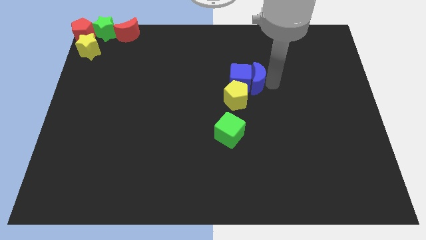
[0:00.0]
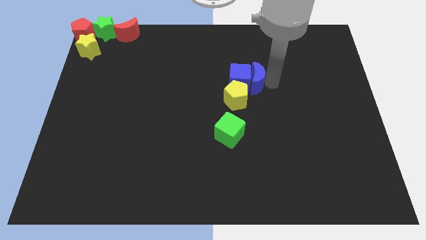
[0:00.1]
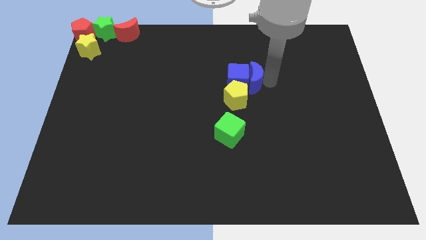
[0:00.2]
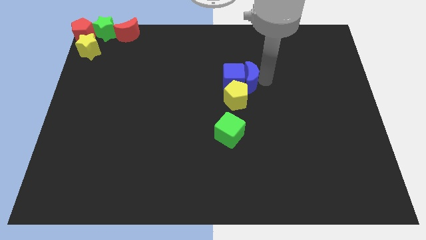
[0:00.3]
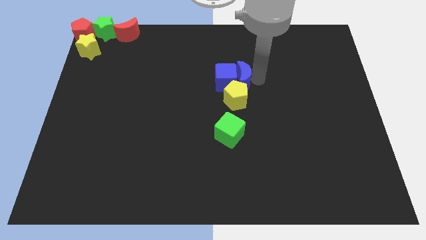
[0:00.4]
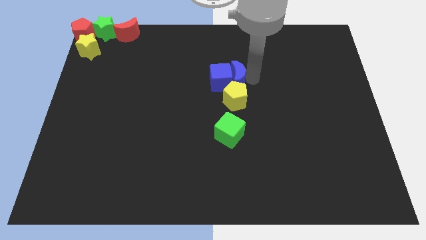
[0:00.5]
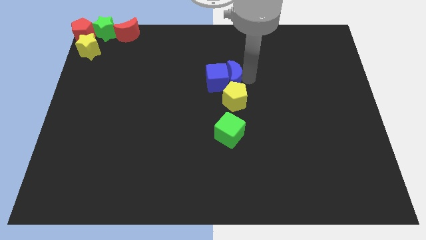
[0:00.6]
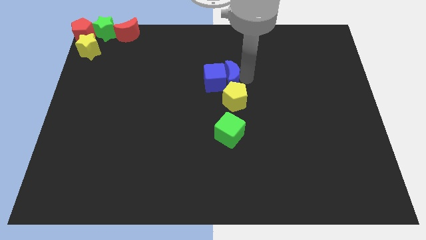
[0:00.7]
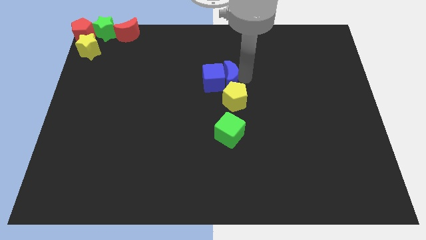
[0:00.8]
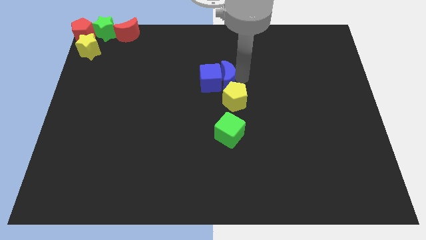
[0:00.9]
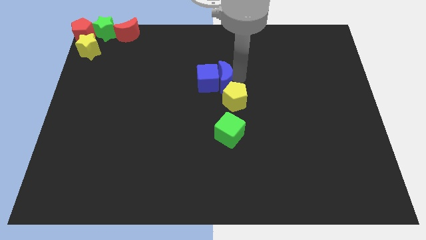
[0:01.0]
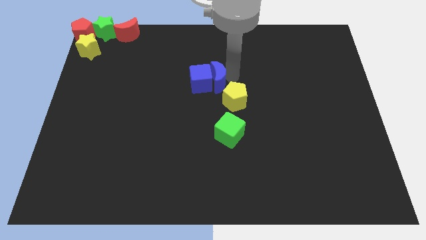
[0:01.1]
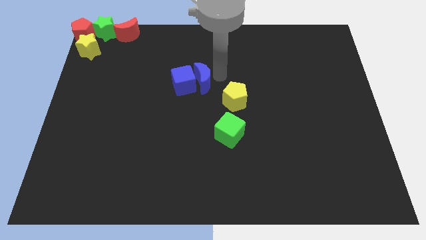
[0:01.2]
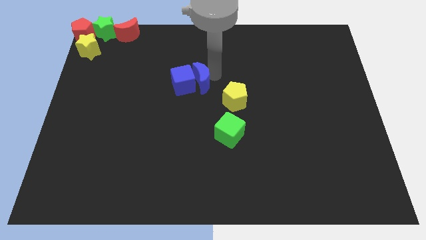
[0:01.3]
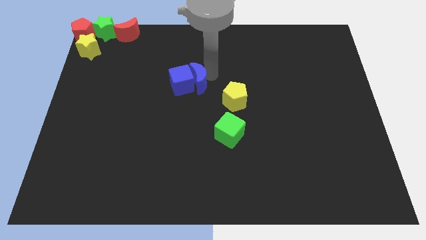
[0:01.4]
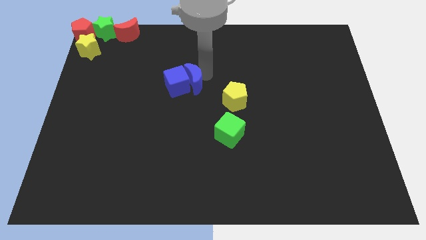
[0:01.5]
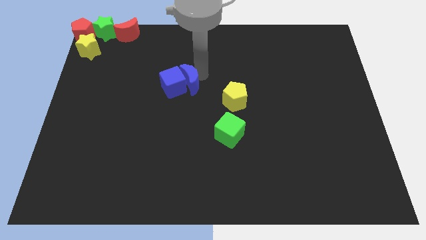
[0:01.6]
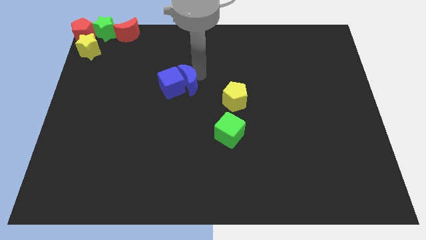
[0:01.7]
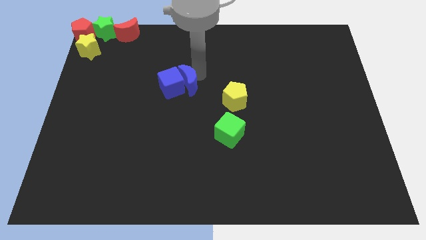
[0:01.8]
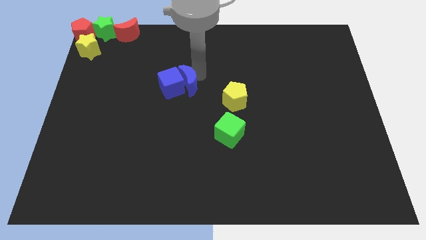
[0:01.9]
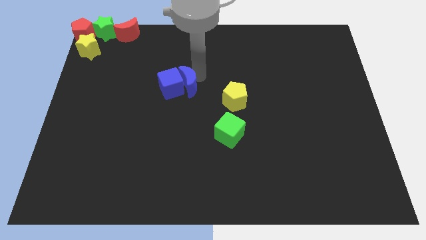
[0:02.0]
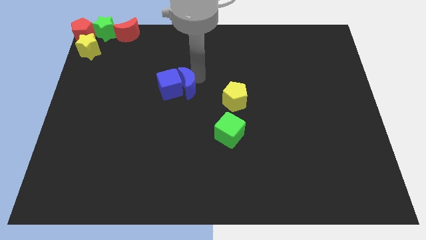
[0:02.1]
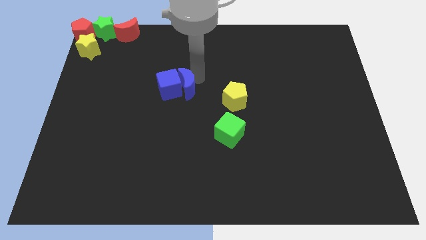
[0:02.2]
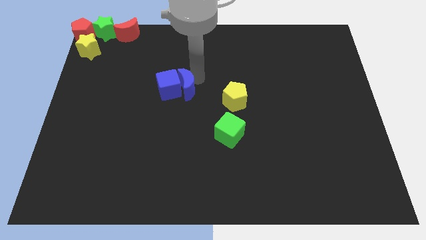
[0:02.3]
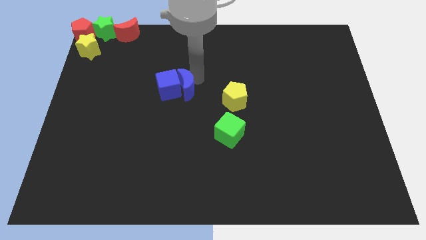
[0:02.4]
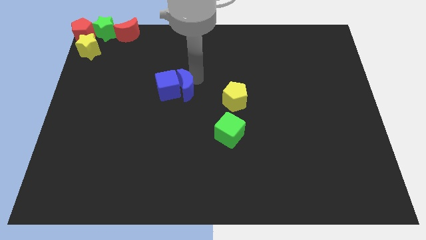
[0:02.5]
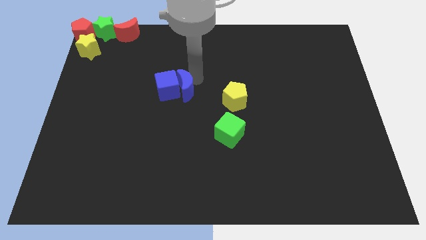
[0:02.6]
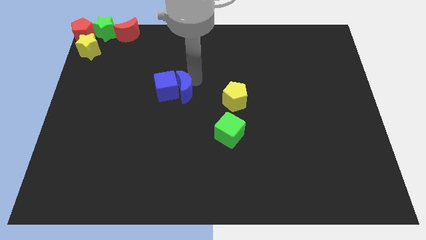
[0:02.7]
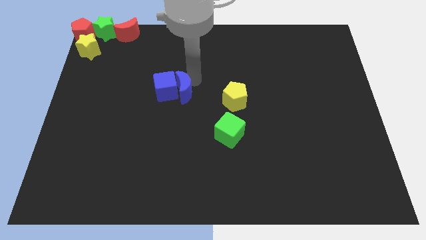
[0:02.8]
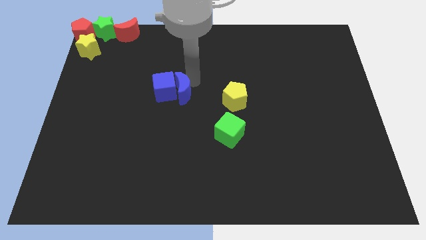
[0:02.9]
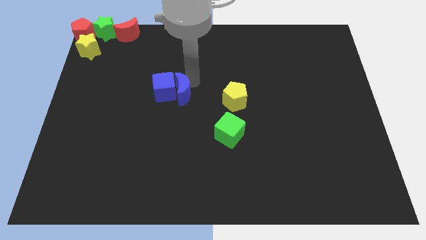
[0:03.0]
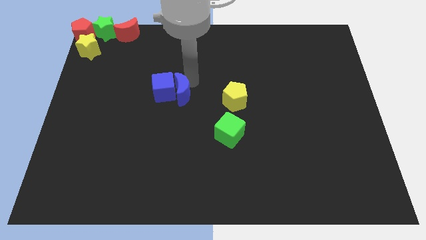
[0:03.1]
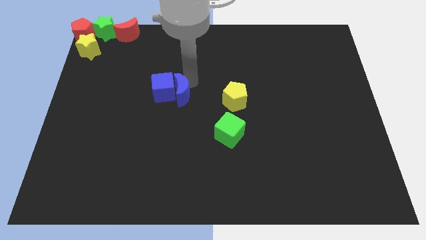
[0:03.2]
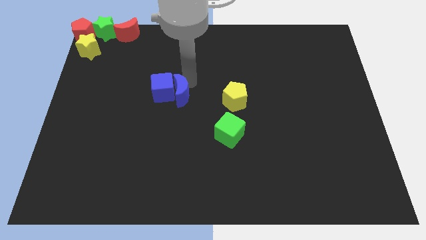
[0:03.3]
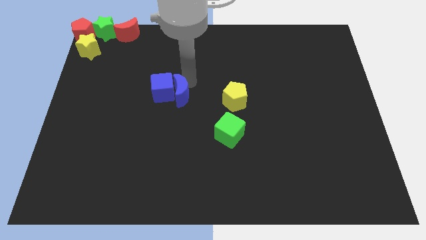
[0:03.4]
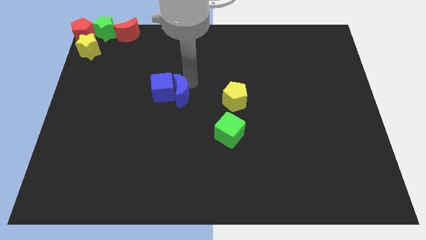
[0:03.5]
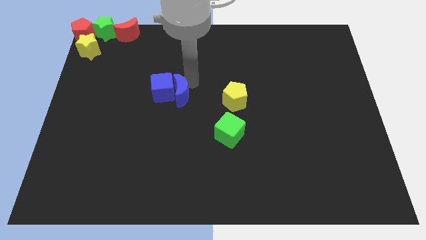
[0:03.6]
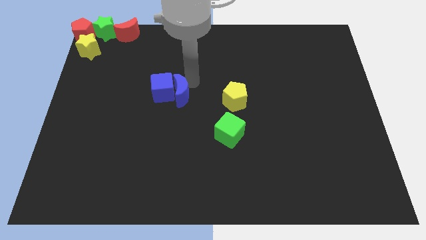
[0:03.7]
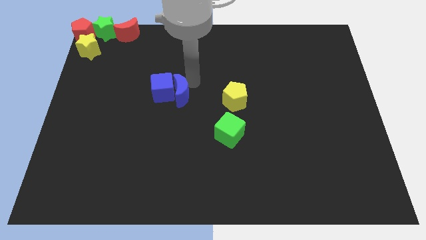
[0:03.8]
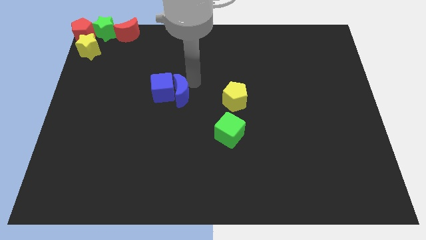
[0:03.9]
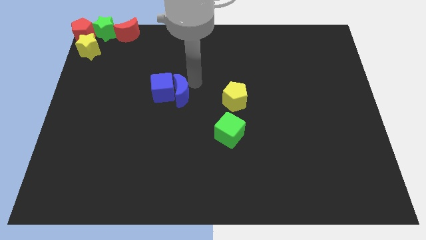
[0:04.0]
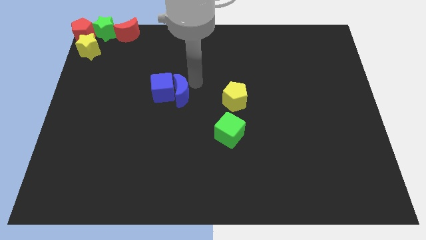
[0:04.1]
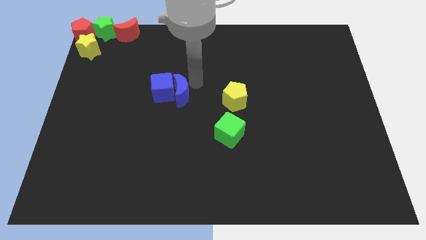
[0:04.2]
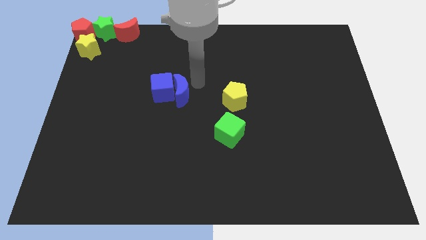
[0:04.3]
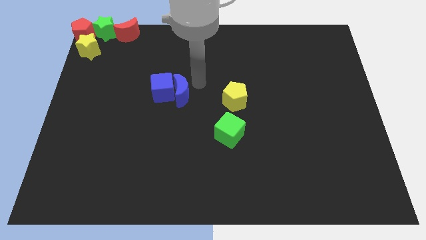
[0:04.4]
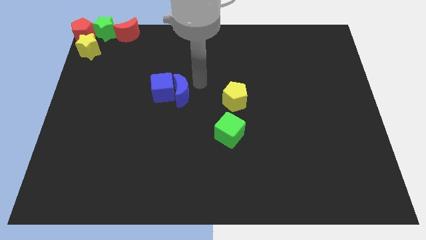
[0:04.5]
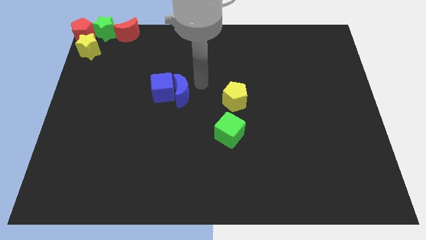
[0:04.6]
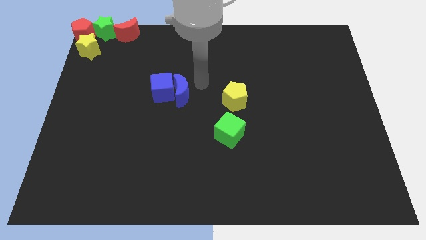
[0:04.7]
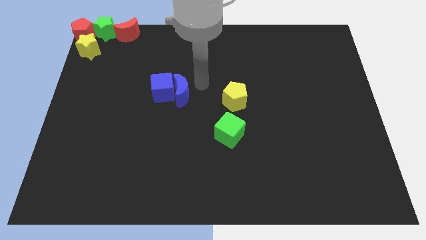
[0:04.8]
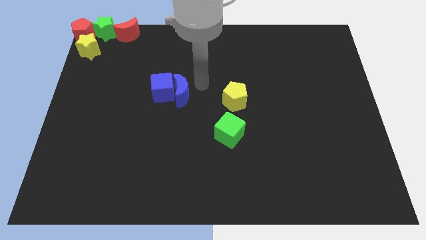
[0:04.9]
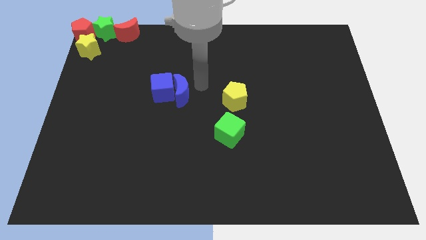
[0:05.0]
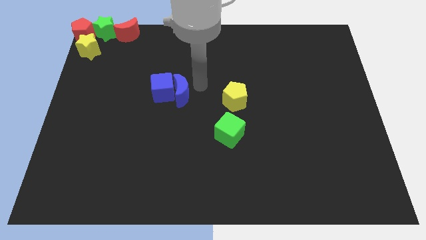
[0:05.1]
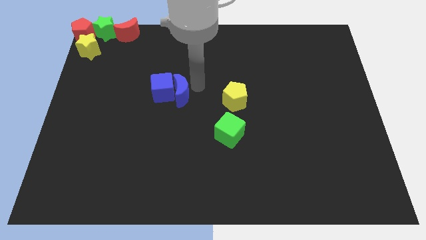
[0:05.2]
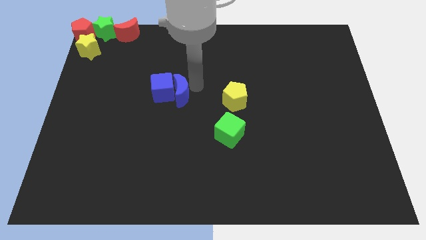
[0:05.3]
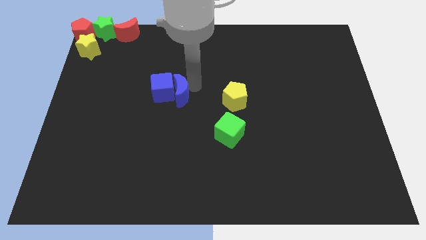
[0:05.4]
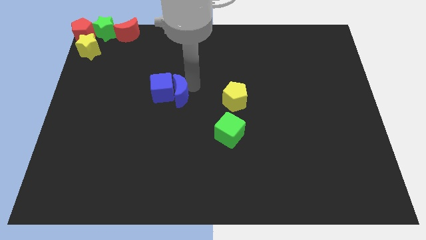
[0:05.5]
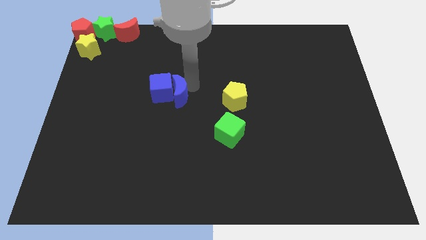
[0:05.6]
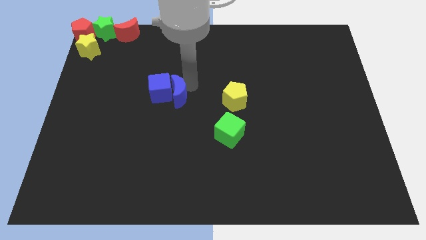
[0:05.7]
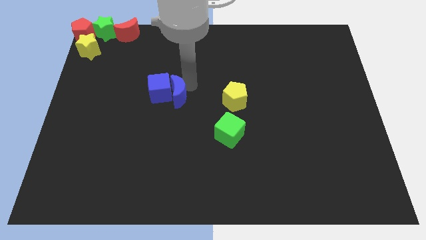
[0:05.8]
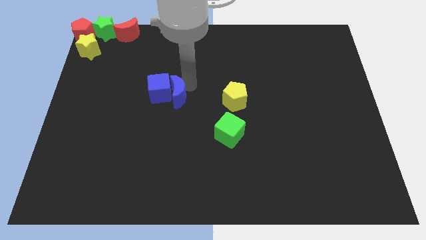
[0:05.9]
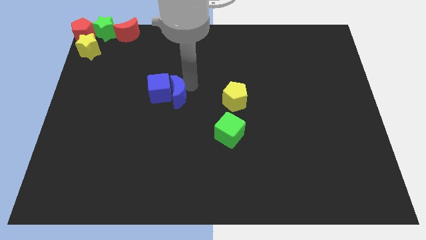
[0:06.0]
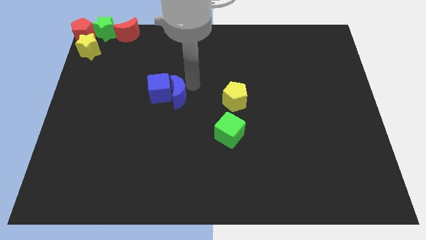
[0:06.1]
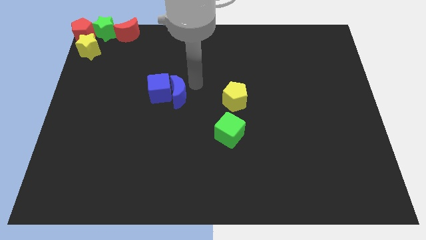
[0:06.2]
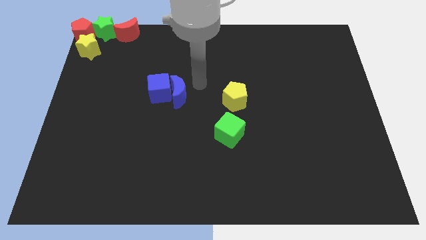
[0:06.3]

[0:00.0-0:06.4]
push blue blocks towards middle left side of the board

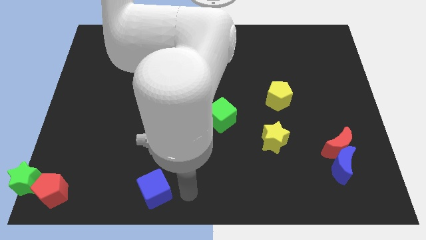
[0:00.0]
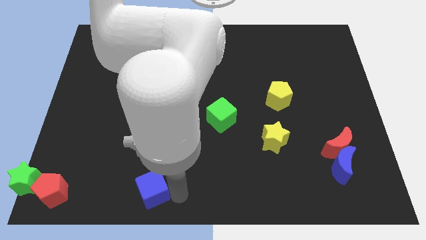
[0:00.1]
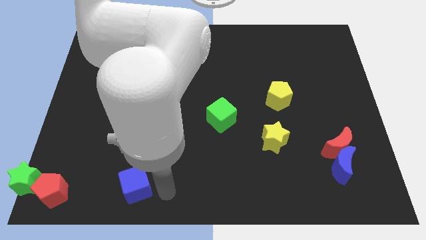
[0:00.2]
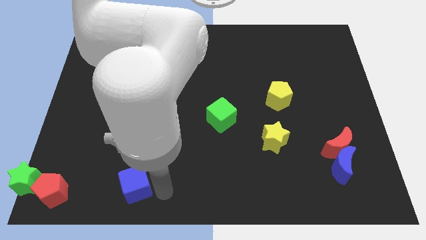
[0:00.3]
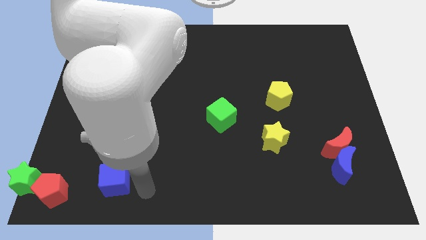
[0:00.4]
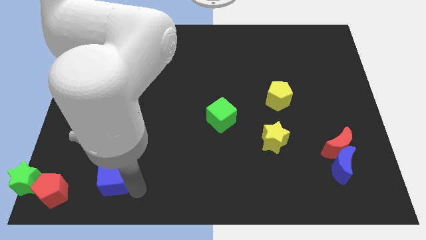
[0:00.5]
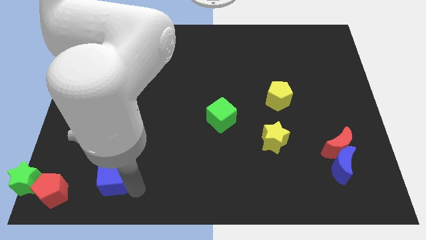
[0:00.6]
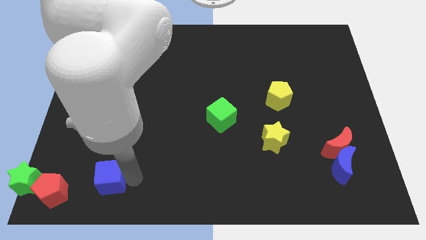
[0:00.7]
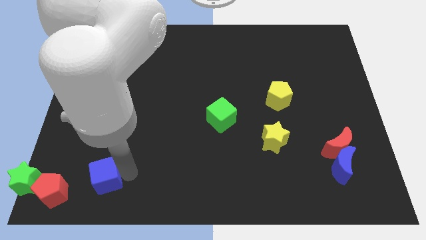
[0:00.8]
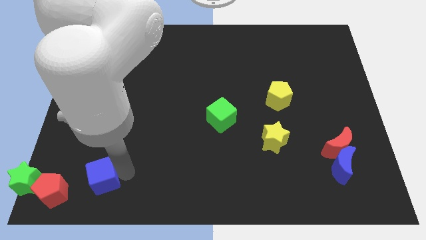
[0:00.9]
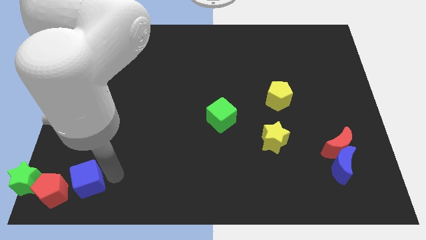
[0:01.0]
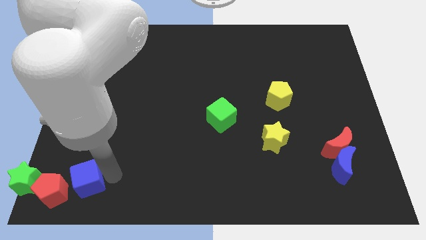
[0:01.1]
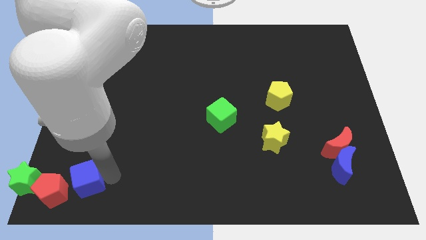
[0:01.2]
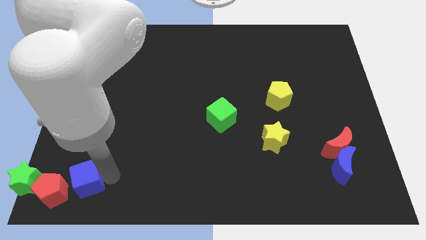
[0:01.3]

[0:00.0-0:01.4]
move the blue cube to the right side of the red pentagon

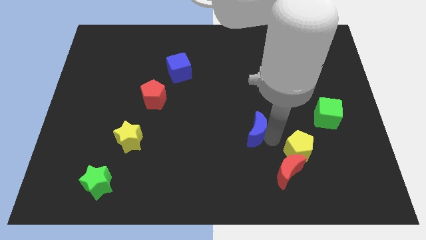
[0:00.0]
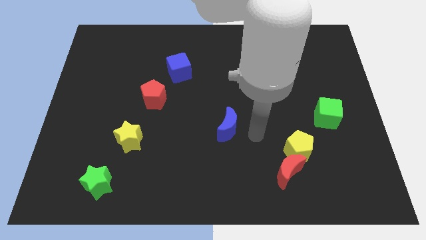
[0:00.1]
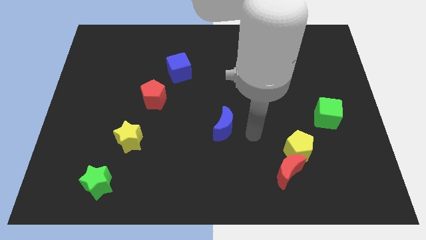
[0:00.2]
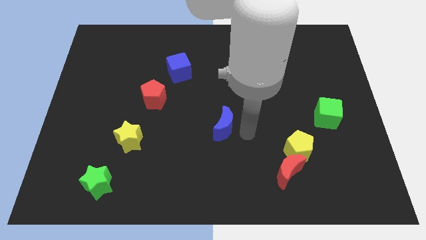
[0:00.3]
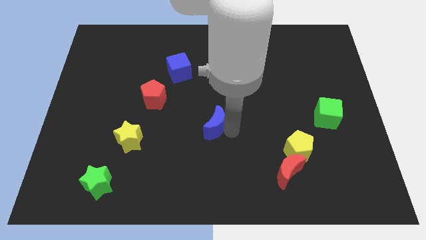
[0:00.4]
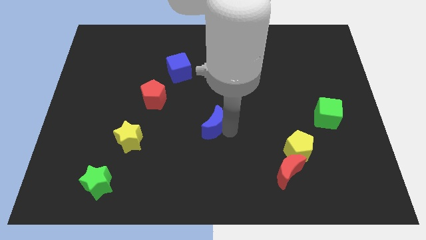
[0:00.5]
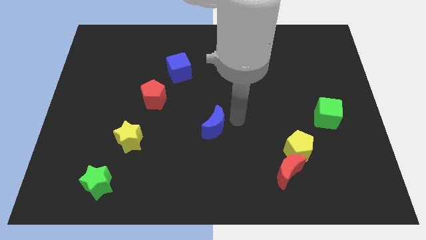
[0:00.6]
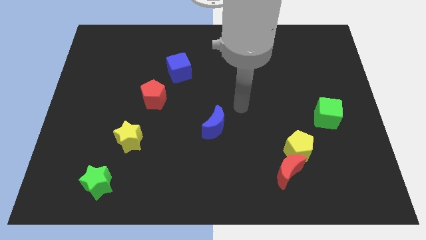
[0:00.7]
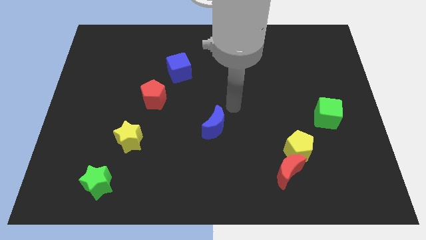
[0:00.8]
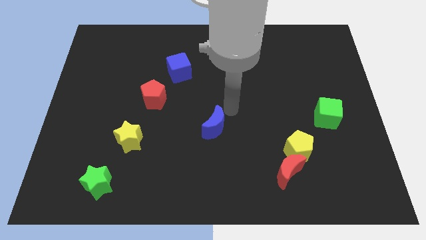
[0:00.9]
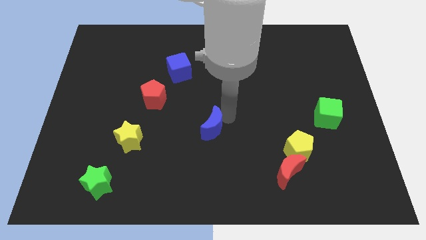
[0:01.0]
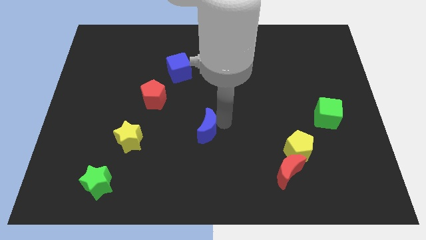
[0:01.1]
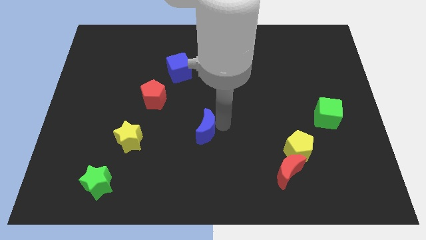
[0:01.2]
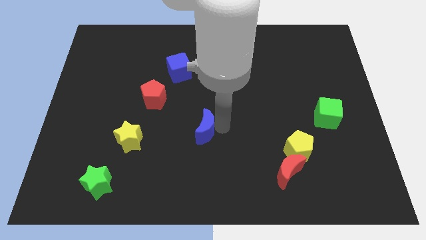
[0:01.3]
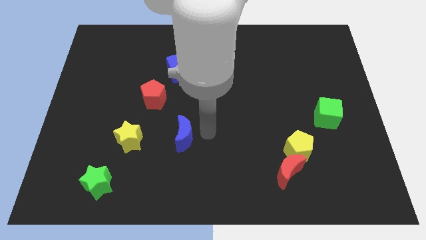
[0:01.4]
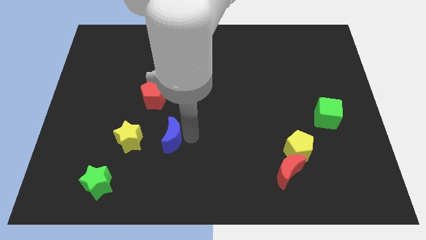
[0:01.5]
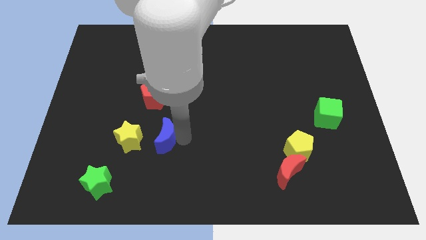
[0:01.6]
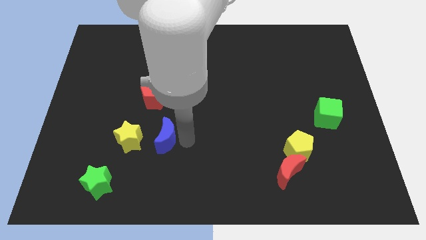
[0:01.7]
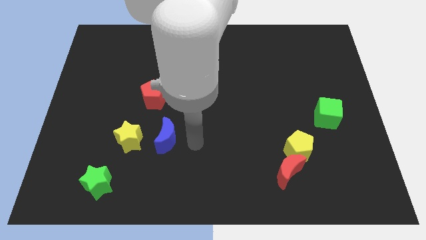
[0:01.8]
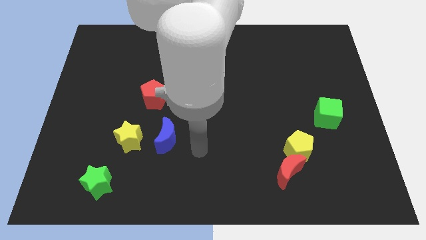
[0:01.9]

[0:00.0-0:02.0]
push the blue crescent to the right of the yellow star
